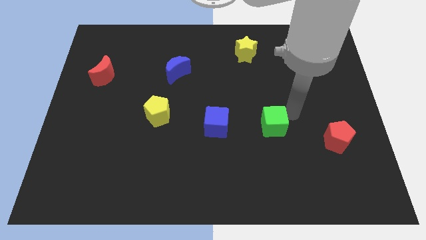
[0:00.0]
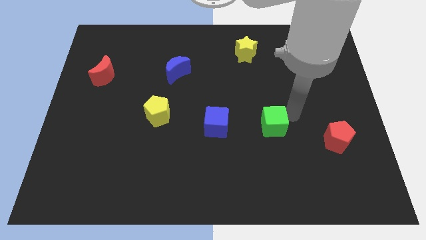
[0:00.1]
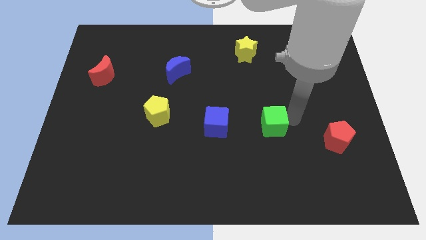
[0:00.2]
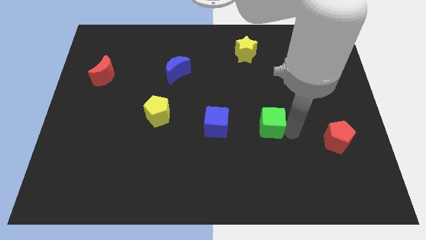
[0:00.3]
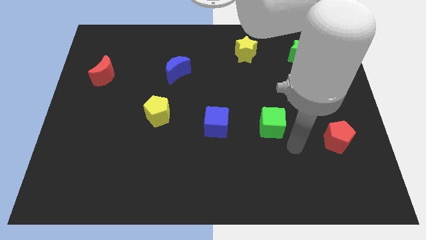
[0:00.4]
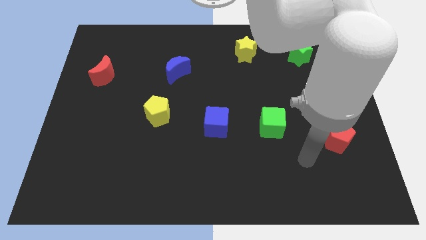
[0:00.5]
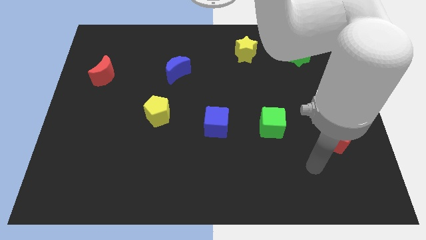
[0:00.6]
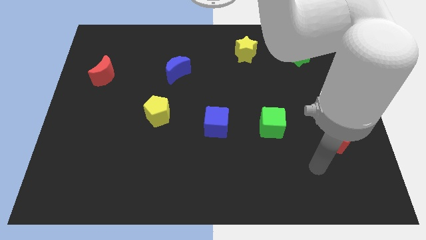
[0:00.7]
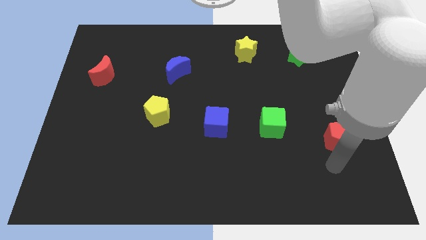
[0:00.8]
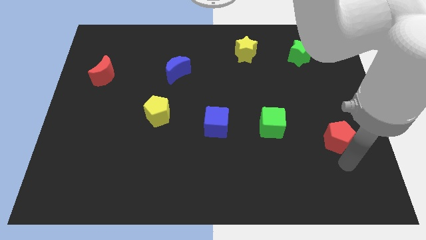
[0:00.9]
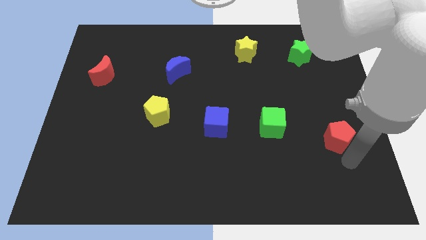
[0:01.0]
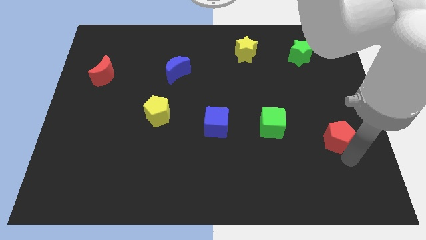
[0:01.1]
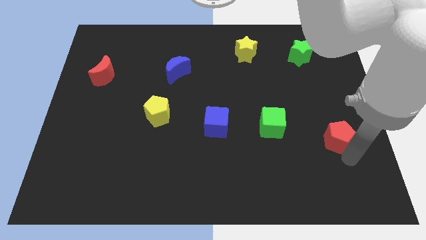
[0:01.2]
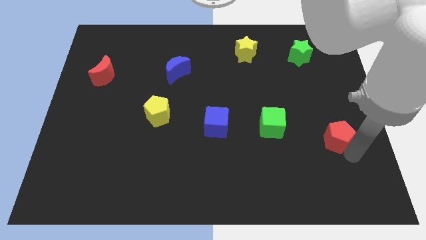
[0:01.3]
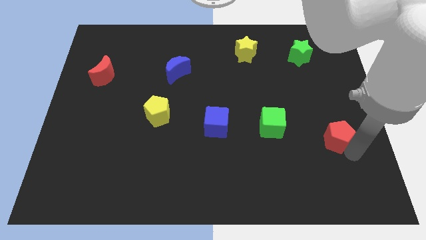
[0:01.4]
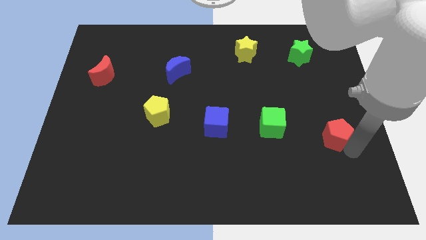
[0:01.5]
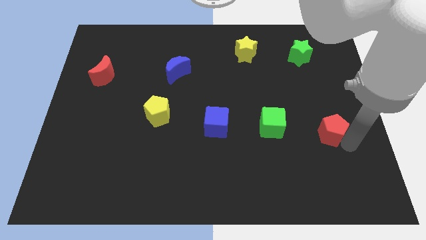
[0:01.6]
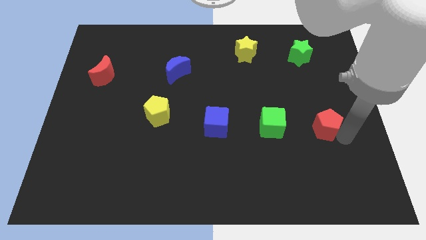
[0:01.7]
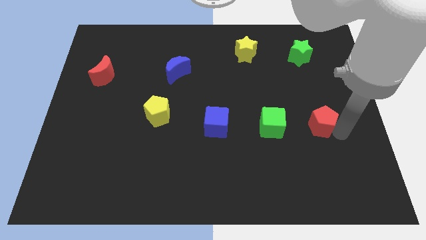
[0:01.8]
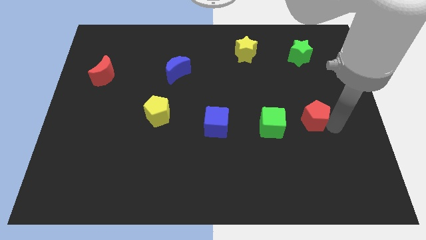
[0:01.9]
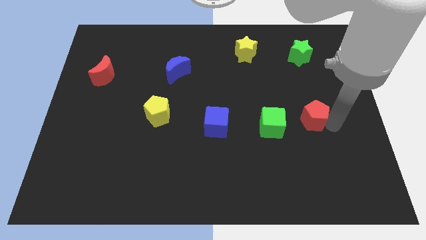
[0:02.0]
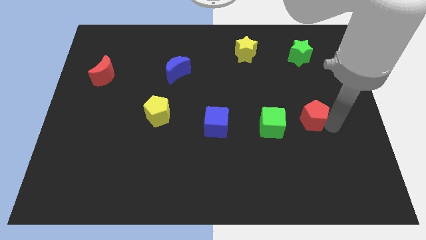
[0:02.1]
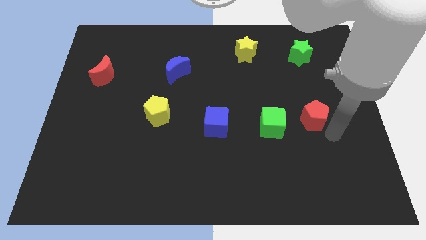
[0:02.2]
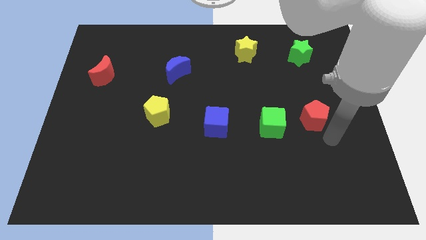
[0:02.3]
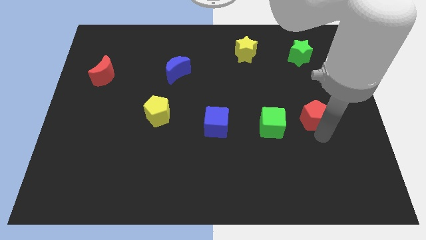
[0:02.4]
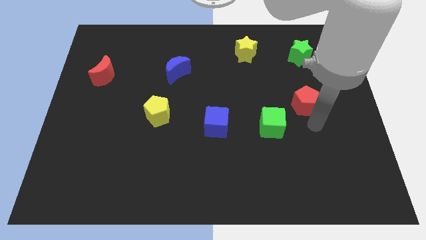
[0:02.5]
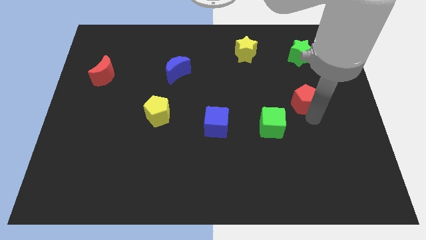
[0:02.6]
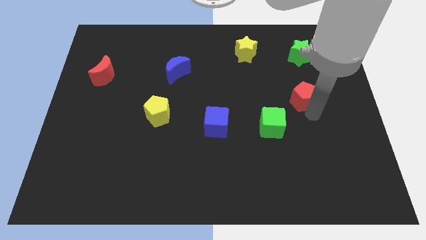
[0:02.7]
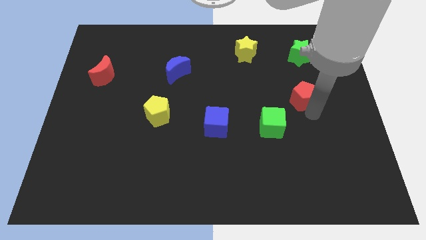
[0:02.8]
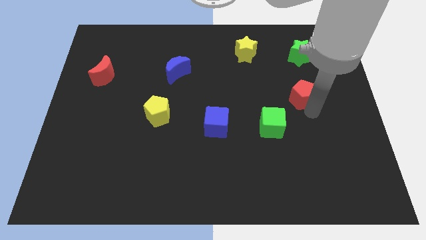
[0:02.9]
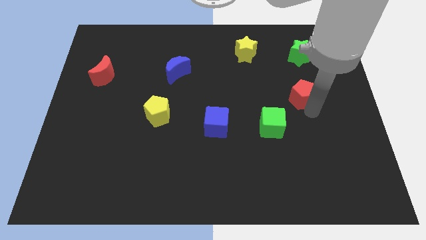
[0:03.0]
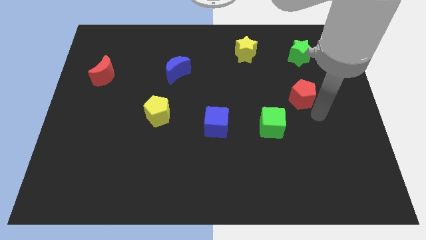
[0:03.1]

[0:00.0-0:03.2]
place the red pentagon diagonally top right to green cube

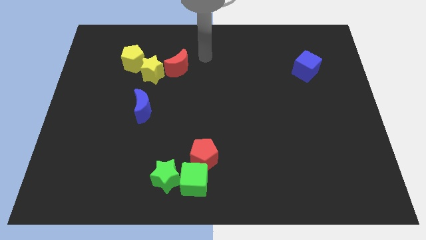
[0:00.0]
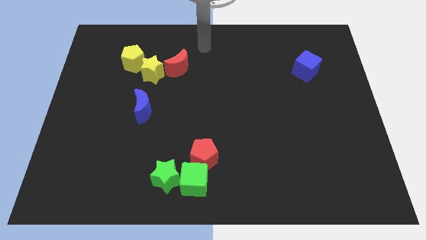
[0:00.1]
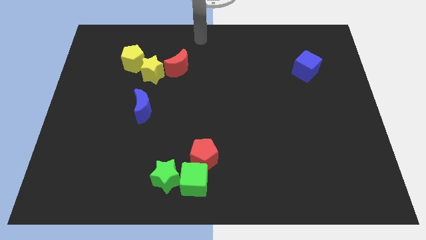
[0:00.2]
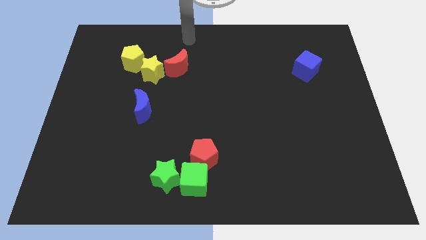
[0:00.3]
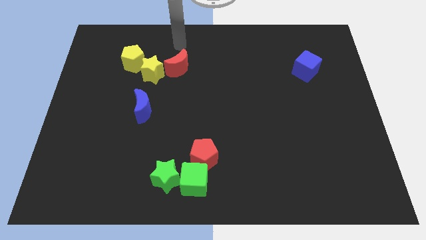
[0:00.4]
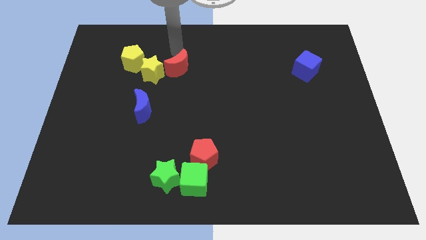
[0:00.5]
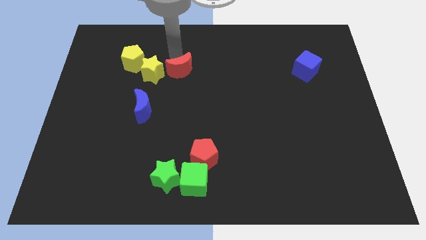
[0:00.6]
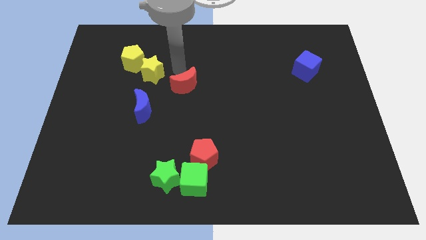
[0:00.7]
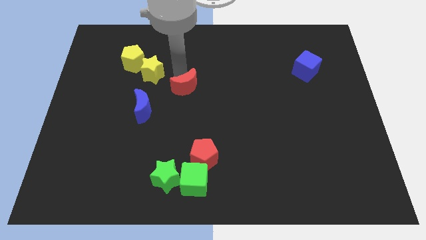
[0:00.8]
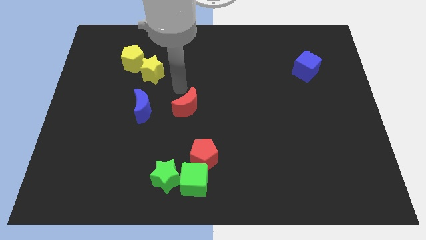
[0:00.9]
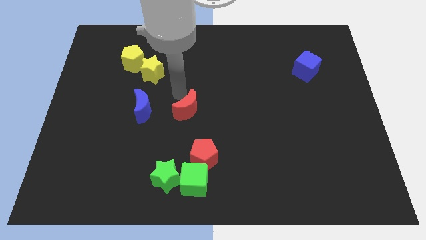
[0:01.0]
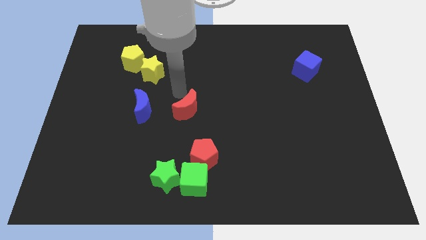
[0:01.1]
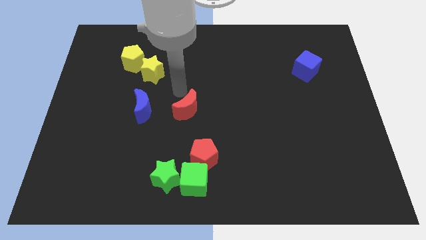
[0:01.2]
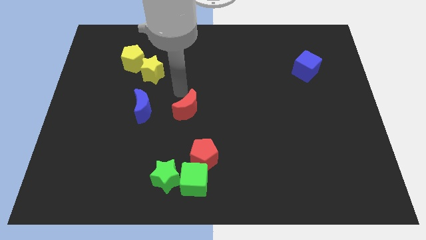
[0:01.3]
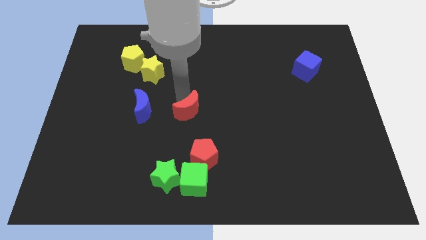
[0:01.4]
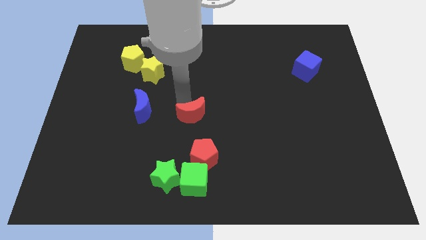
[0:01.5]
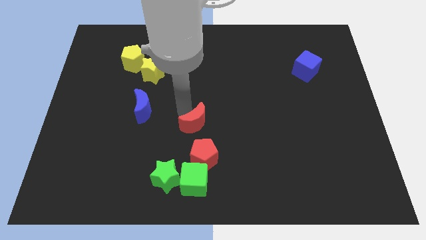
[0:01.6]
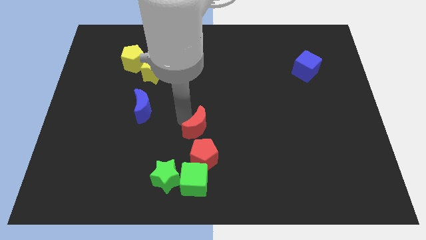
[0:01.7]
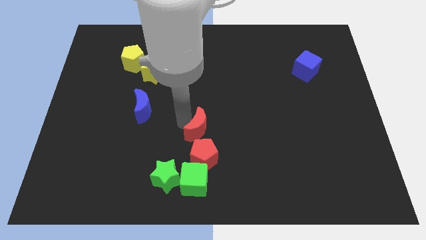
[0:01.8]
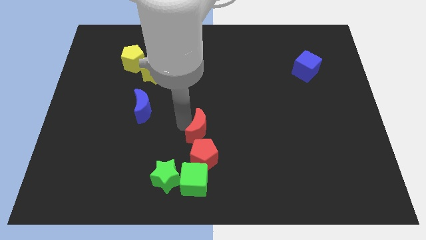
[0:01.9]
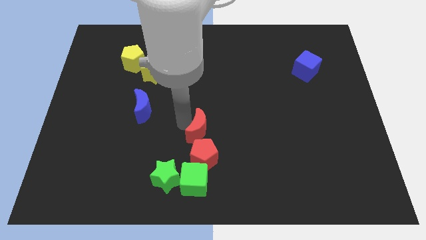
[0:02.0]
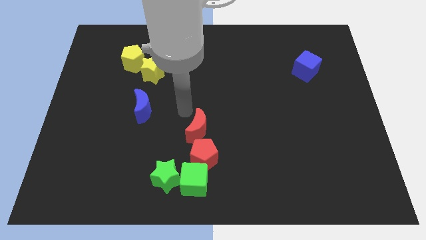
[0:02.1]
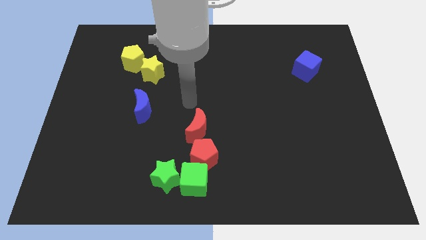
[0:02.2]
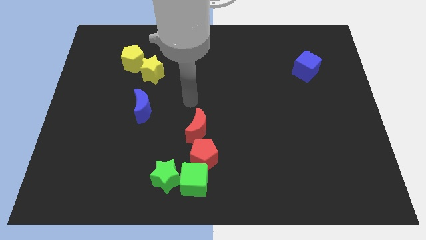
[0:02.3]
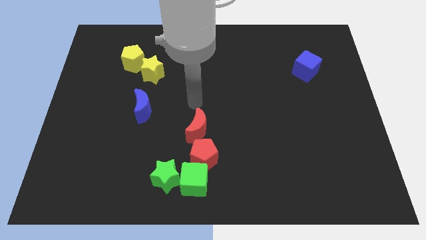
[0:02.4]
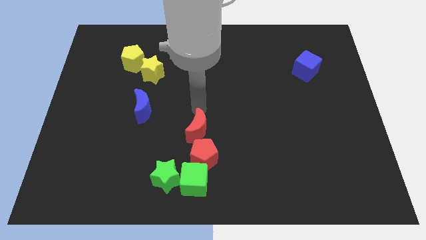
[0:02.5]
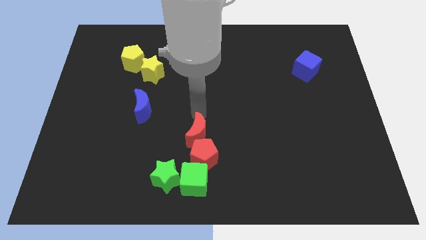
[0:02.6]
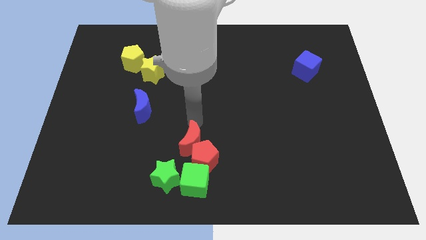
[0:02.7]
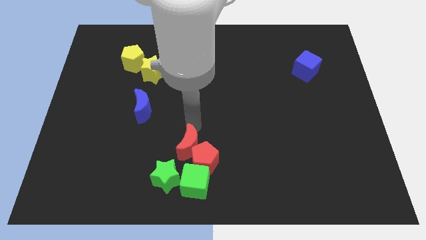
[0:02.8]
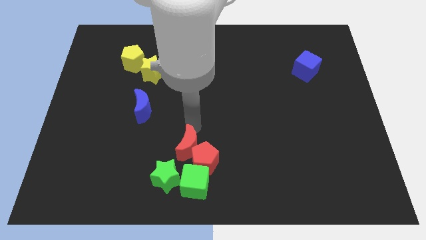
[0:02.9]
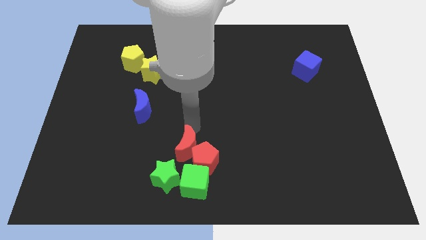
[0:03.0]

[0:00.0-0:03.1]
drag red moon close to red pentagon

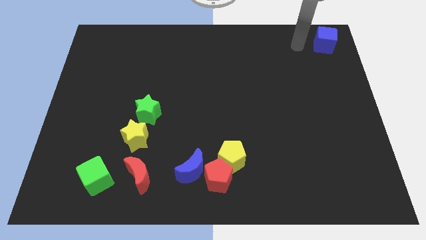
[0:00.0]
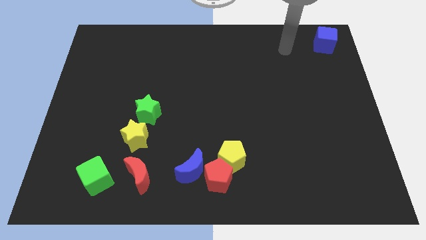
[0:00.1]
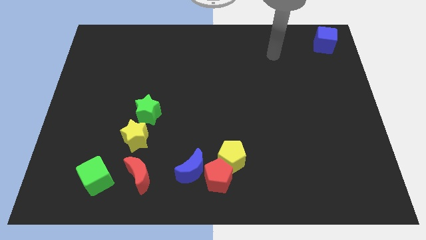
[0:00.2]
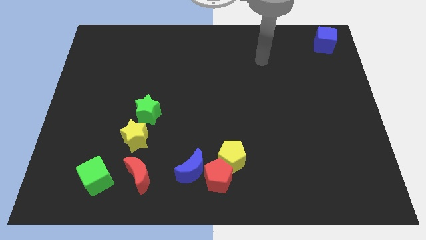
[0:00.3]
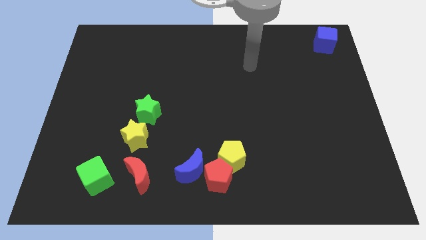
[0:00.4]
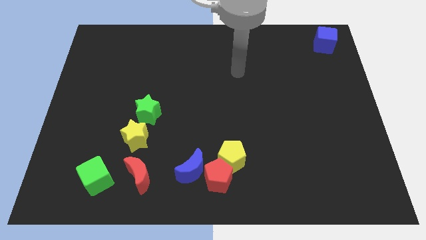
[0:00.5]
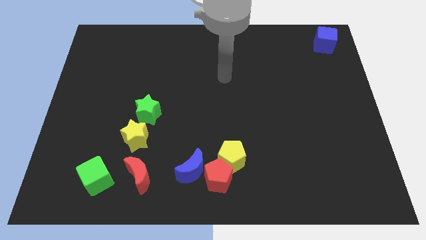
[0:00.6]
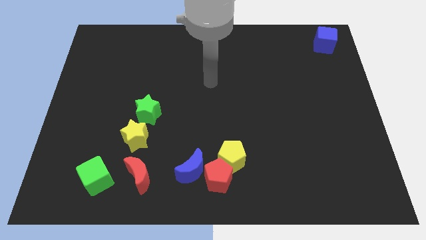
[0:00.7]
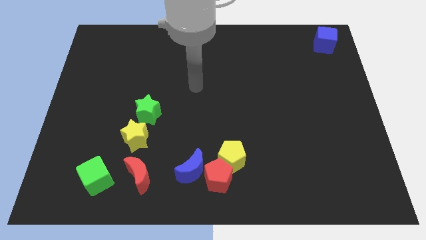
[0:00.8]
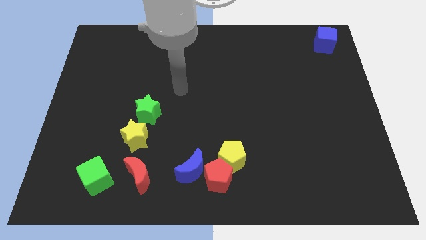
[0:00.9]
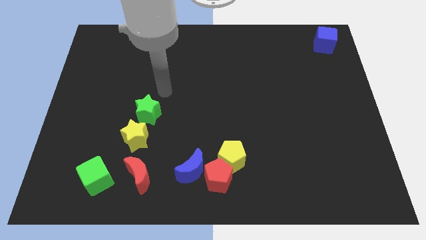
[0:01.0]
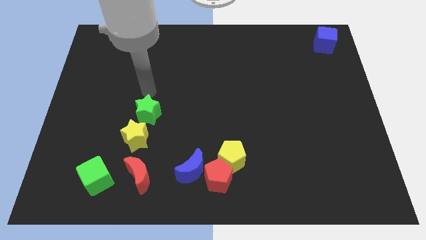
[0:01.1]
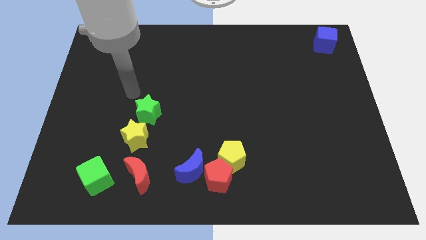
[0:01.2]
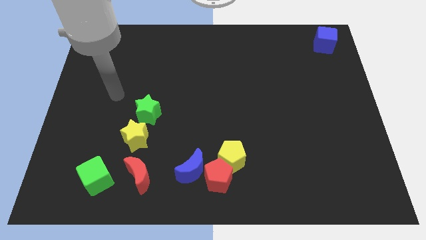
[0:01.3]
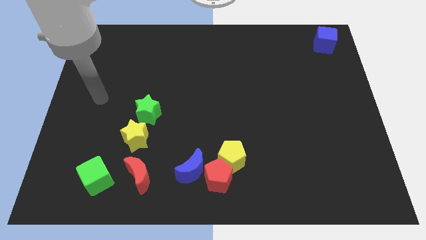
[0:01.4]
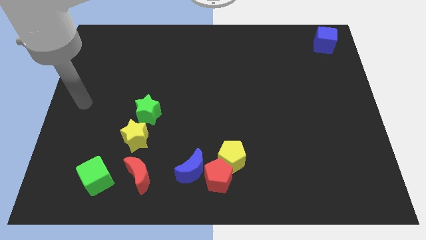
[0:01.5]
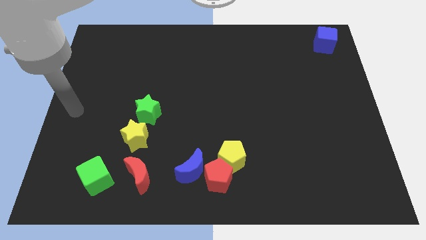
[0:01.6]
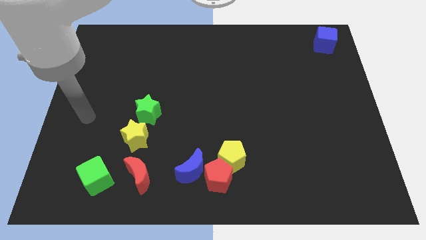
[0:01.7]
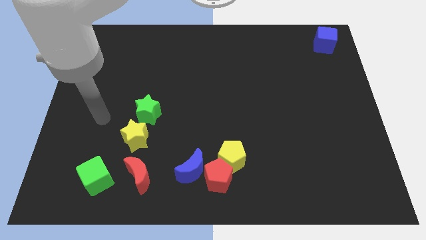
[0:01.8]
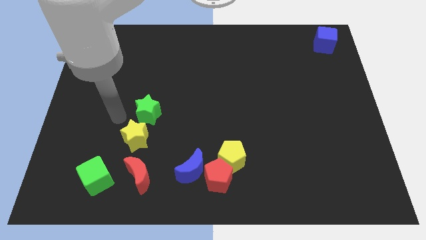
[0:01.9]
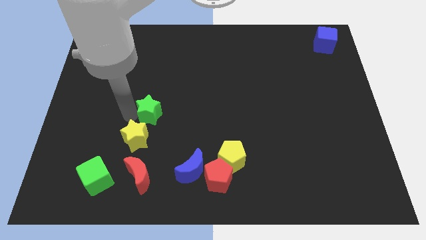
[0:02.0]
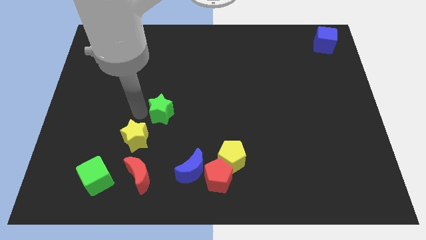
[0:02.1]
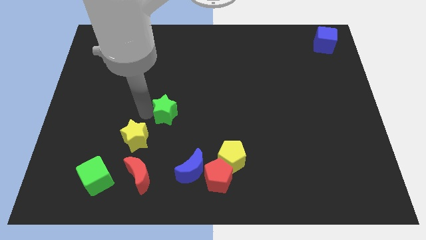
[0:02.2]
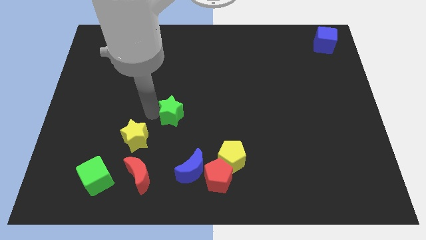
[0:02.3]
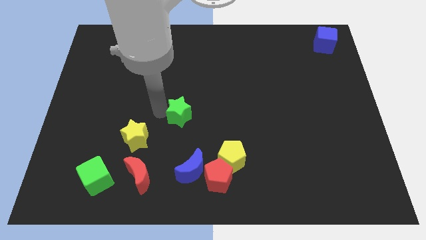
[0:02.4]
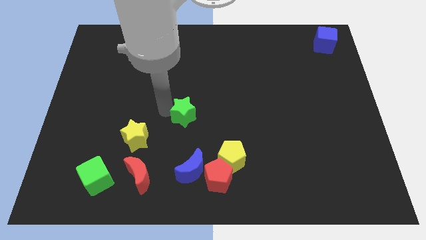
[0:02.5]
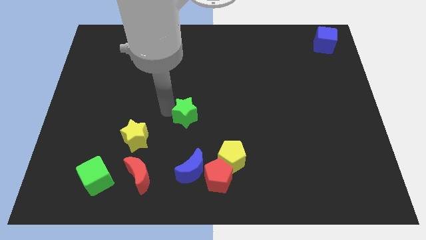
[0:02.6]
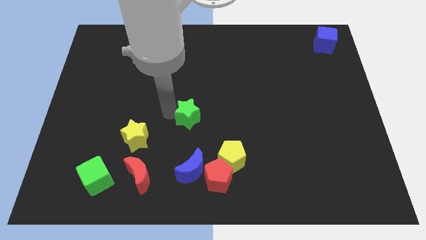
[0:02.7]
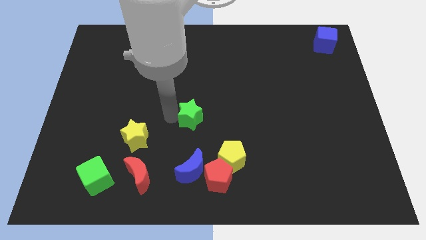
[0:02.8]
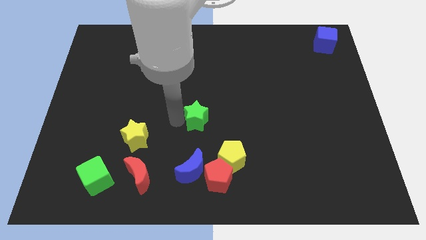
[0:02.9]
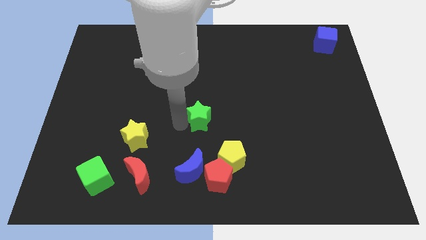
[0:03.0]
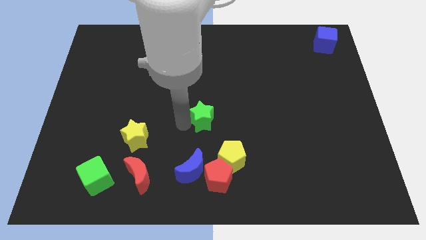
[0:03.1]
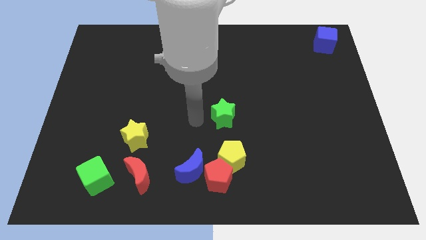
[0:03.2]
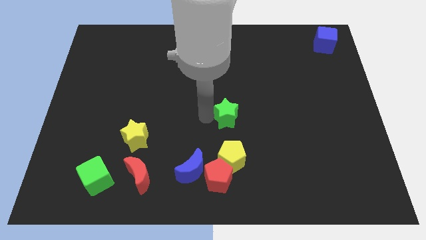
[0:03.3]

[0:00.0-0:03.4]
move the green star to the top of the yellow pentagon
